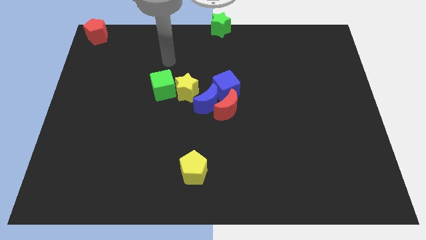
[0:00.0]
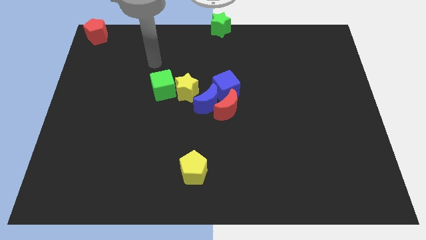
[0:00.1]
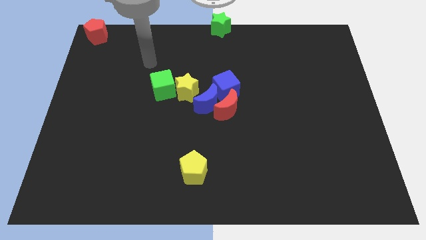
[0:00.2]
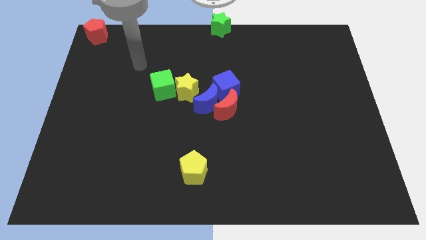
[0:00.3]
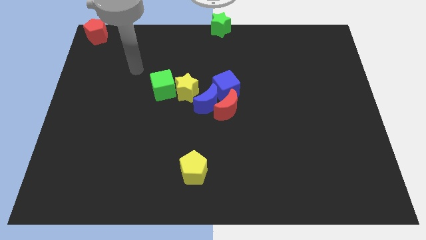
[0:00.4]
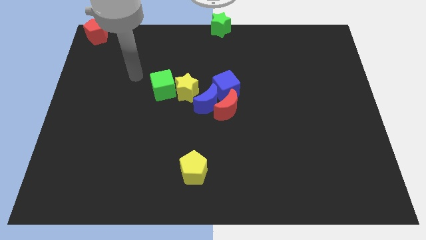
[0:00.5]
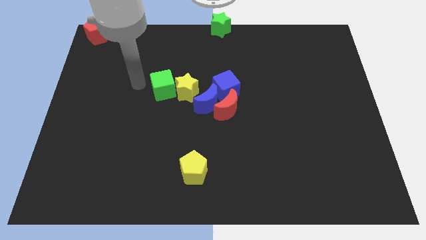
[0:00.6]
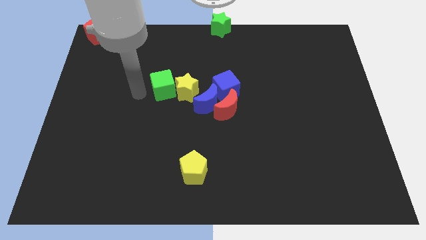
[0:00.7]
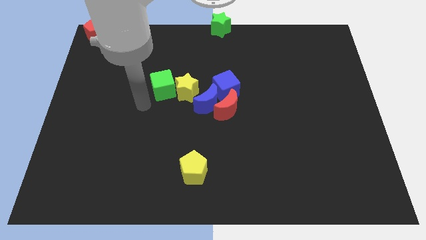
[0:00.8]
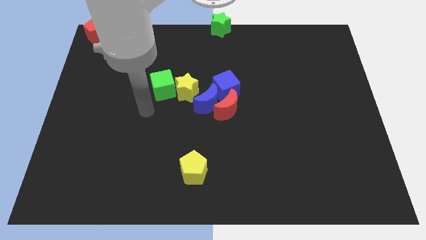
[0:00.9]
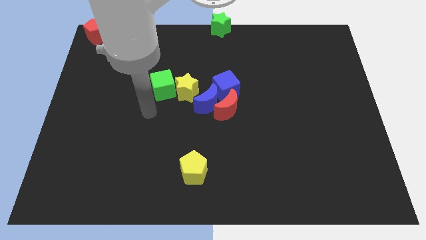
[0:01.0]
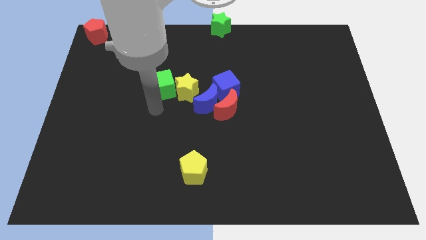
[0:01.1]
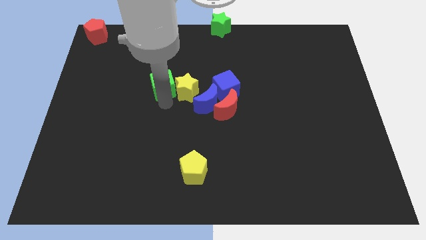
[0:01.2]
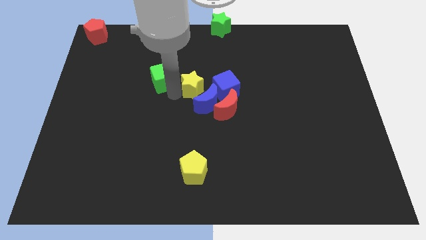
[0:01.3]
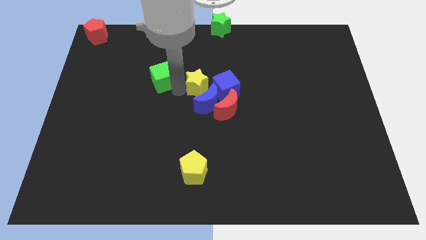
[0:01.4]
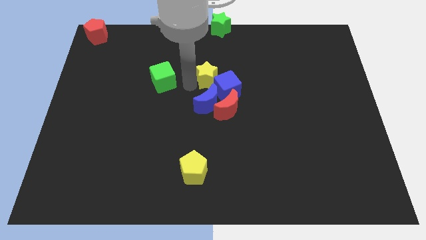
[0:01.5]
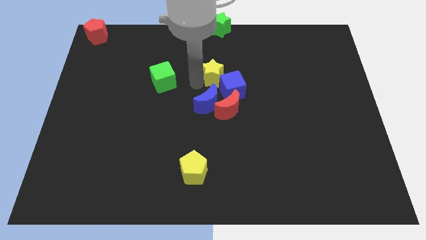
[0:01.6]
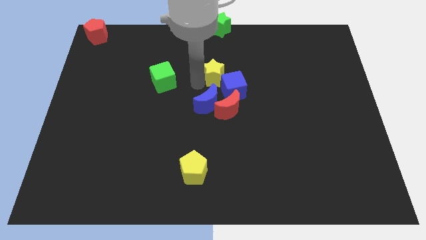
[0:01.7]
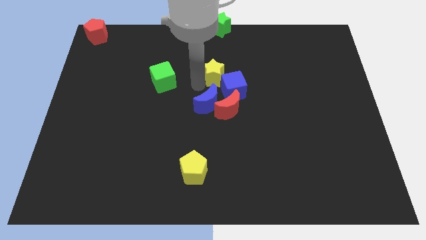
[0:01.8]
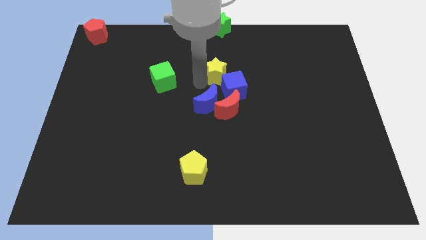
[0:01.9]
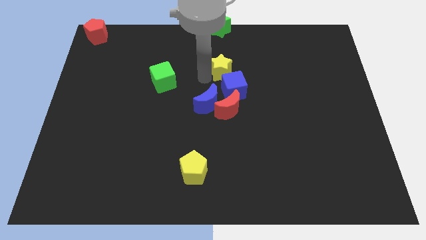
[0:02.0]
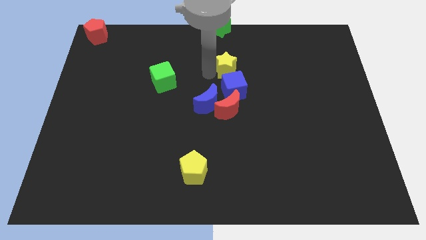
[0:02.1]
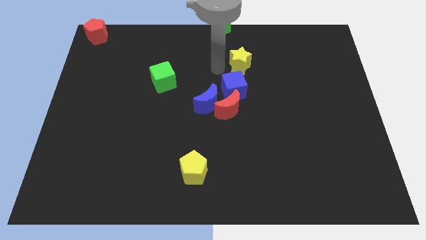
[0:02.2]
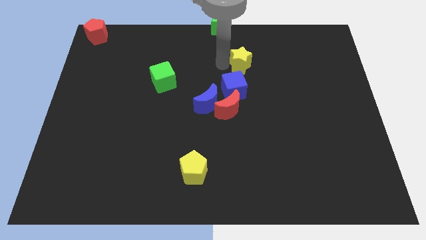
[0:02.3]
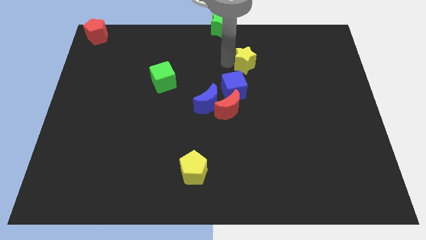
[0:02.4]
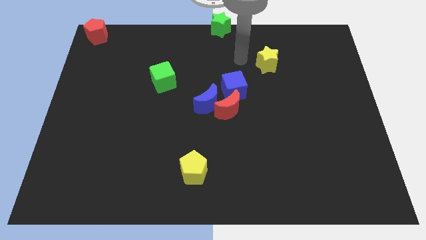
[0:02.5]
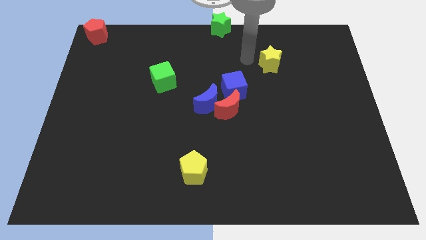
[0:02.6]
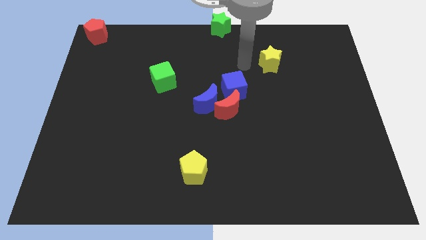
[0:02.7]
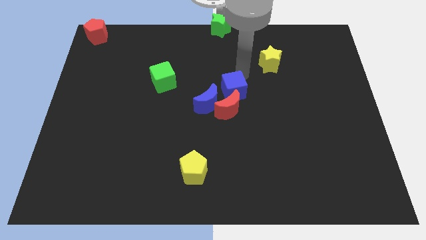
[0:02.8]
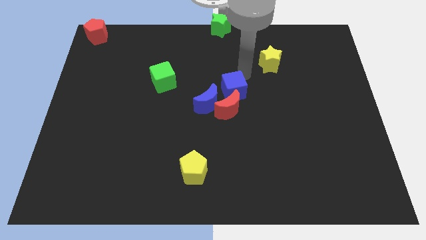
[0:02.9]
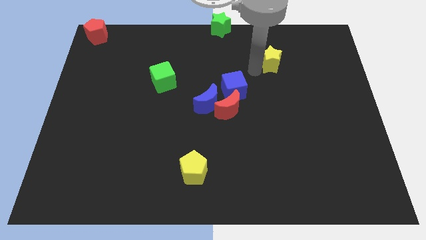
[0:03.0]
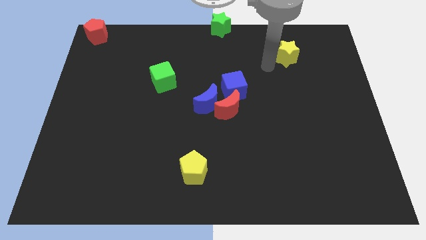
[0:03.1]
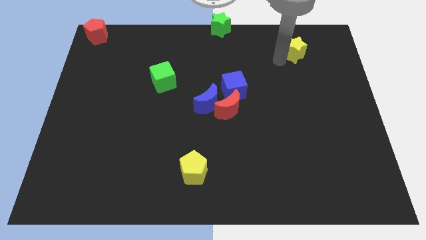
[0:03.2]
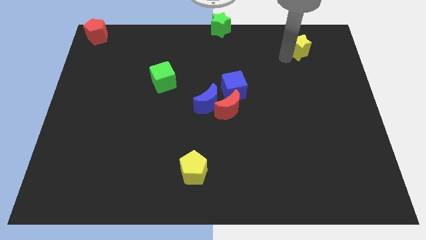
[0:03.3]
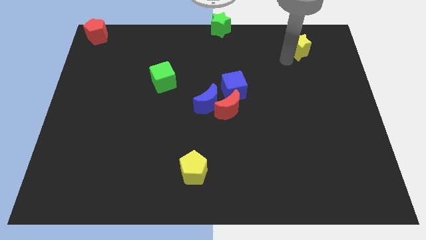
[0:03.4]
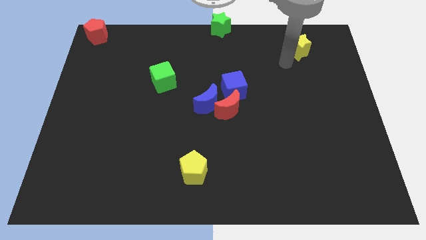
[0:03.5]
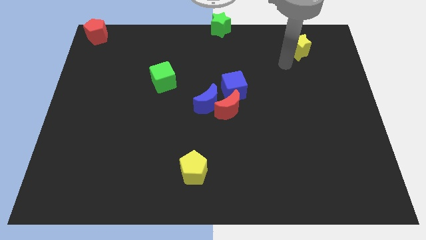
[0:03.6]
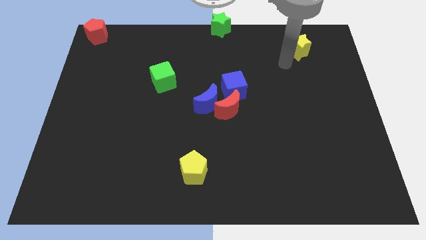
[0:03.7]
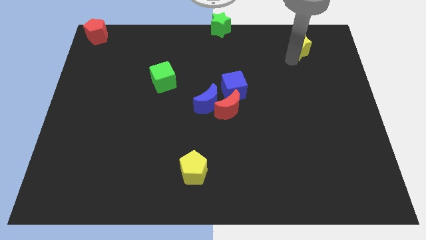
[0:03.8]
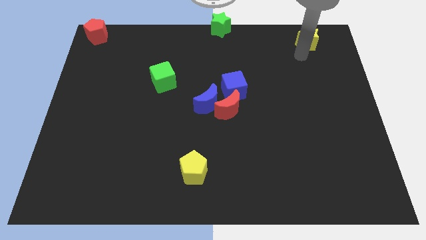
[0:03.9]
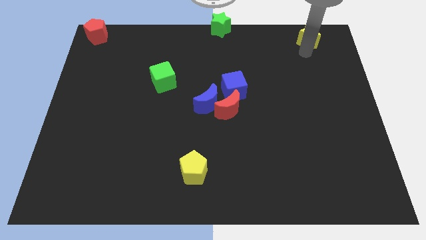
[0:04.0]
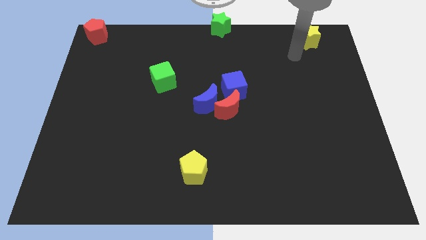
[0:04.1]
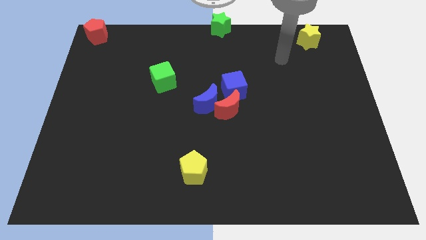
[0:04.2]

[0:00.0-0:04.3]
move the yellow star to the top right corner of the board

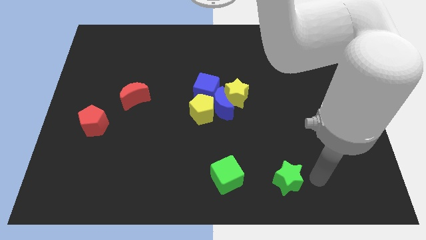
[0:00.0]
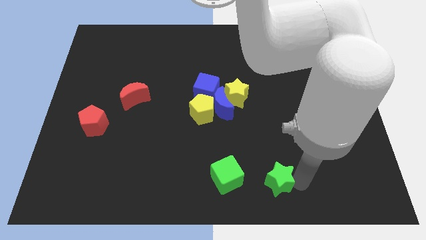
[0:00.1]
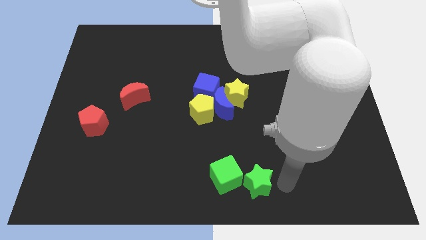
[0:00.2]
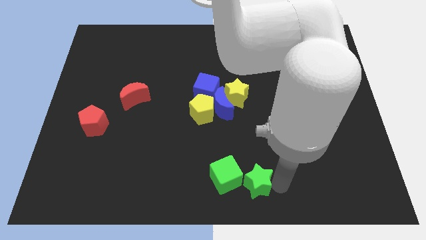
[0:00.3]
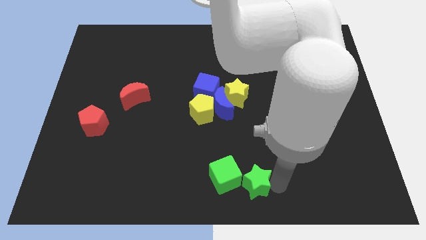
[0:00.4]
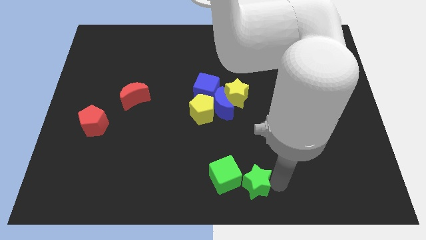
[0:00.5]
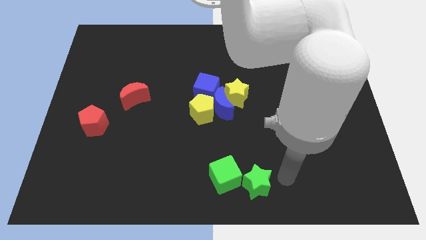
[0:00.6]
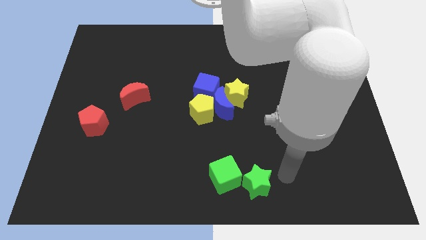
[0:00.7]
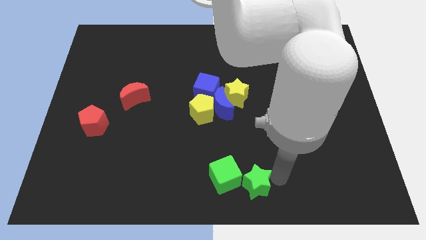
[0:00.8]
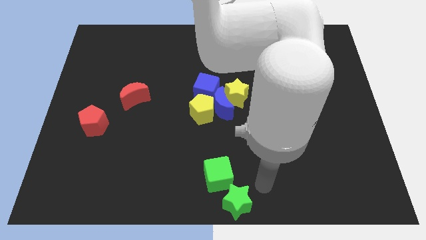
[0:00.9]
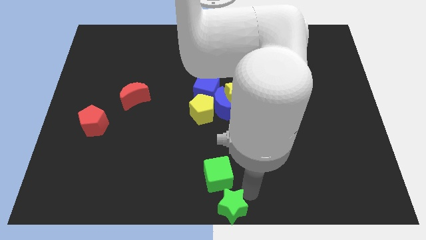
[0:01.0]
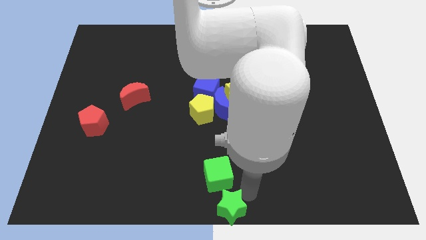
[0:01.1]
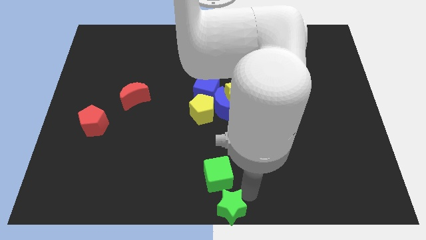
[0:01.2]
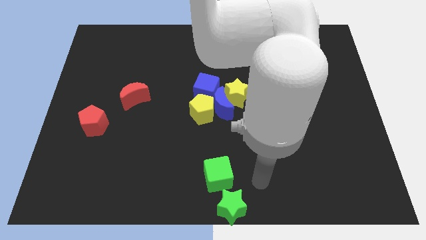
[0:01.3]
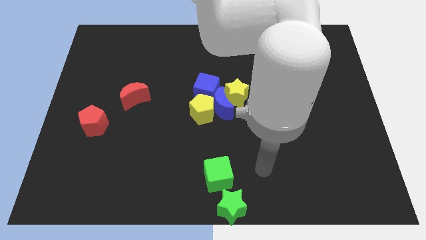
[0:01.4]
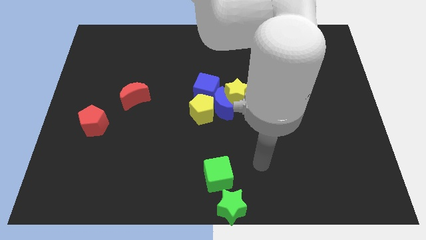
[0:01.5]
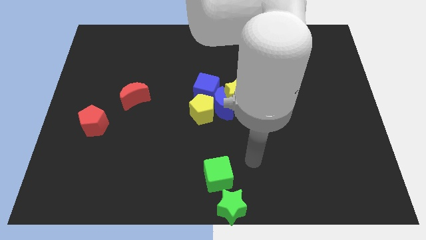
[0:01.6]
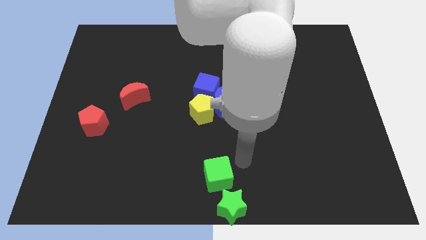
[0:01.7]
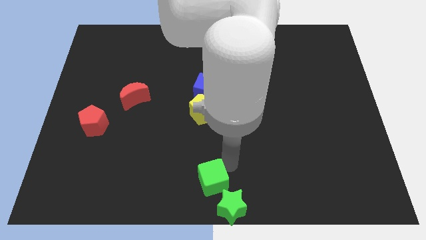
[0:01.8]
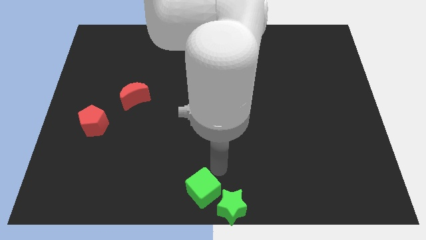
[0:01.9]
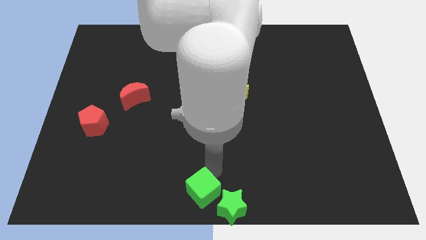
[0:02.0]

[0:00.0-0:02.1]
move the green blocks to the bottom center

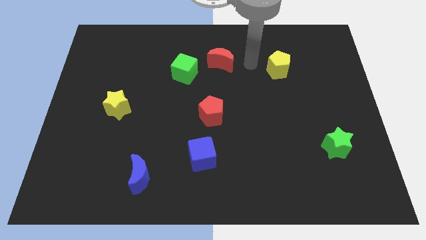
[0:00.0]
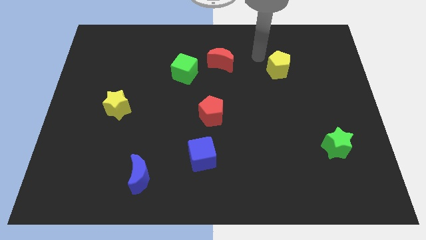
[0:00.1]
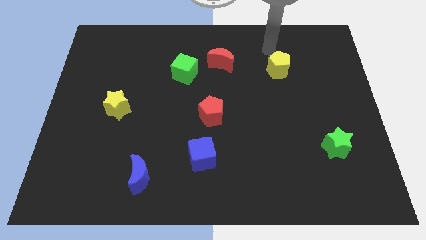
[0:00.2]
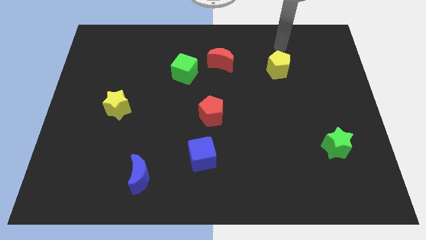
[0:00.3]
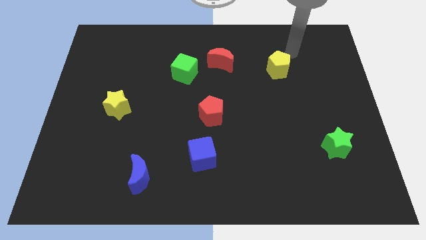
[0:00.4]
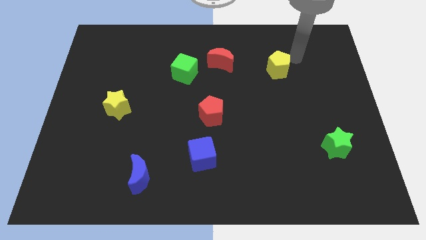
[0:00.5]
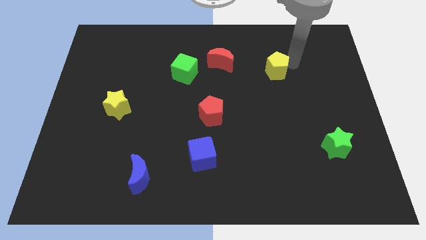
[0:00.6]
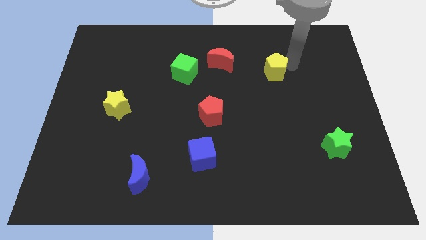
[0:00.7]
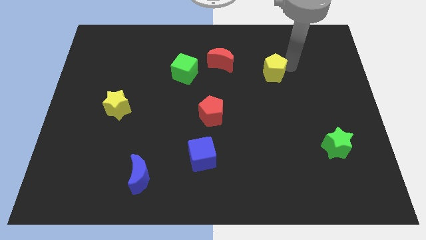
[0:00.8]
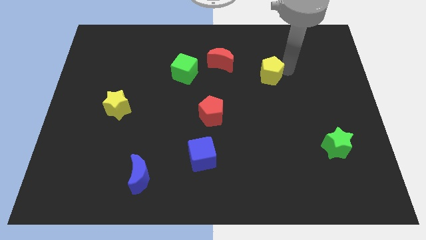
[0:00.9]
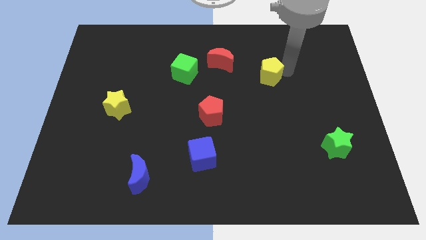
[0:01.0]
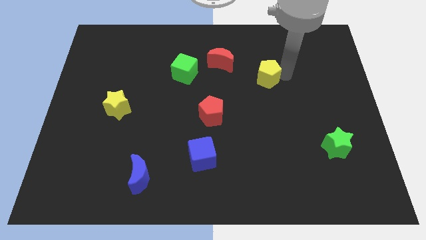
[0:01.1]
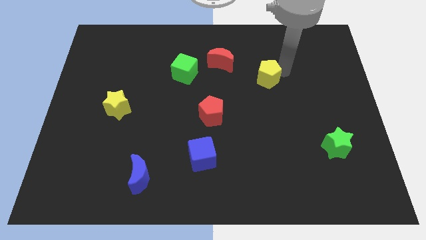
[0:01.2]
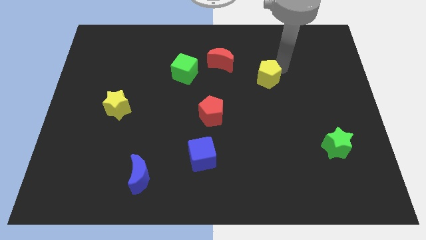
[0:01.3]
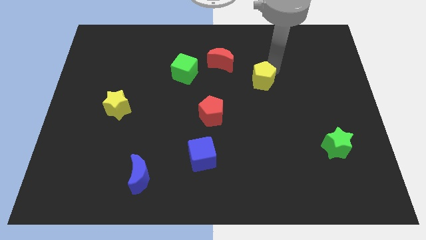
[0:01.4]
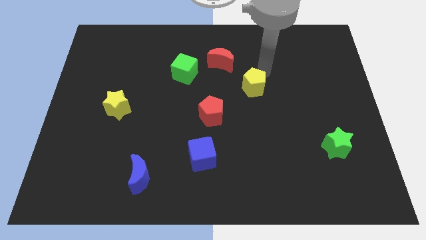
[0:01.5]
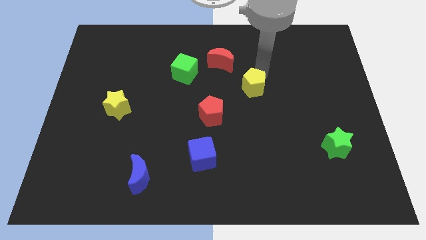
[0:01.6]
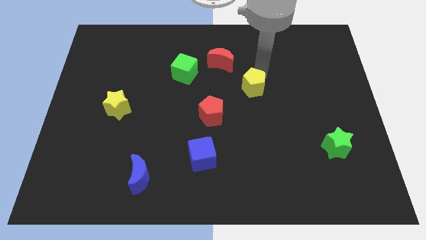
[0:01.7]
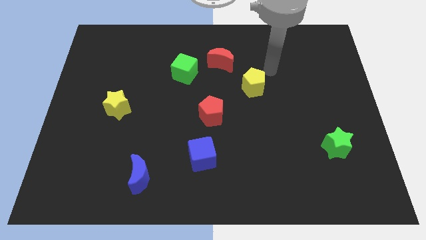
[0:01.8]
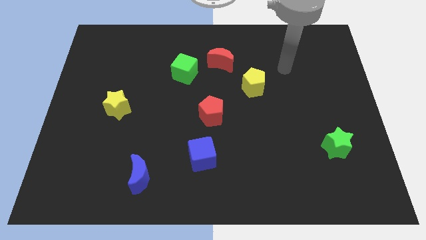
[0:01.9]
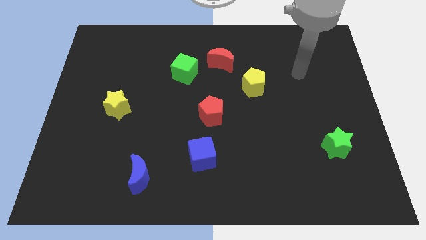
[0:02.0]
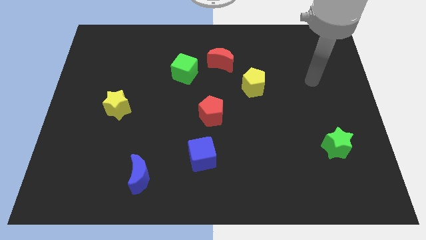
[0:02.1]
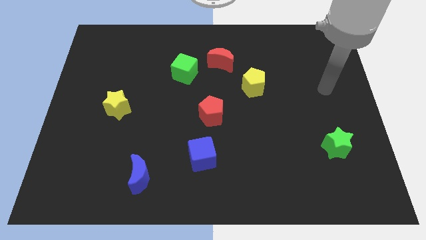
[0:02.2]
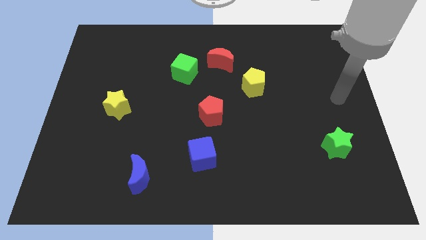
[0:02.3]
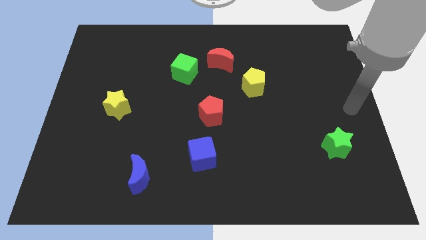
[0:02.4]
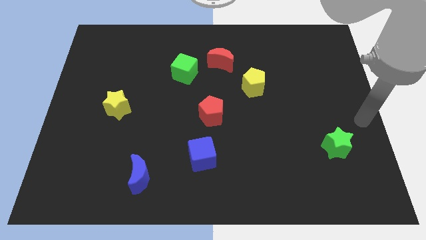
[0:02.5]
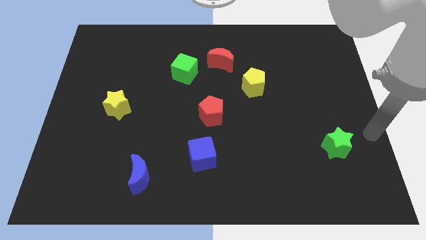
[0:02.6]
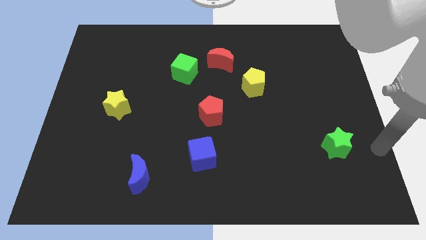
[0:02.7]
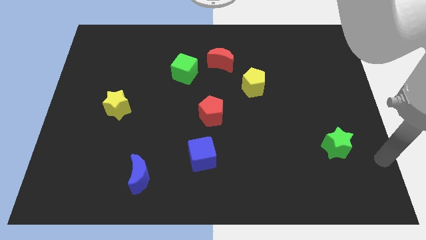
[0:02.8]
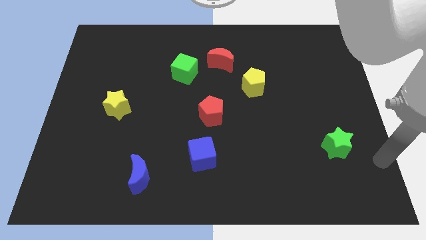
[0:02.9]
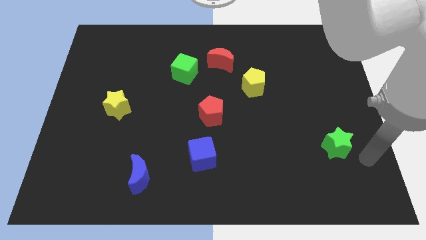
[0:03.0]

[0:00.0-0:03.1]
place the yellow pentagon diagonally to the red moon
